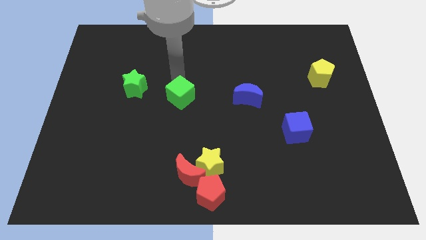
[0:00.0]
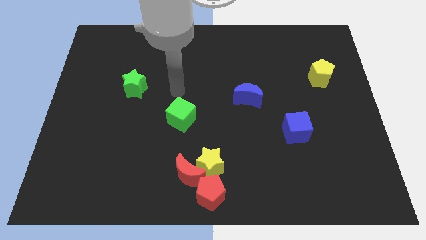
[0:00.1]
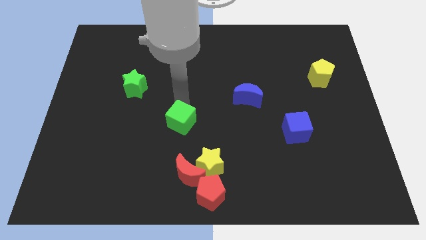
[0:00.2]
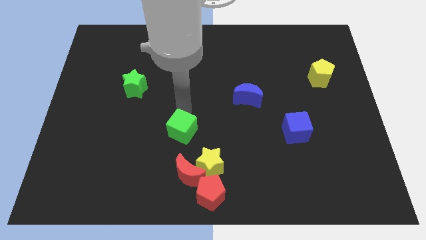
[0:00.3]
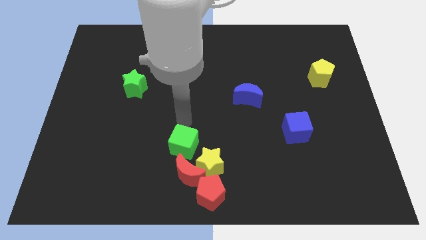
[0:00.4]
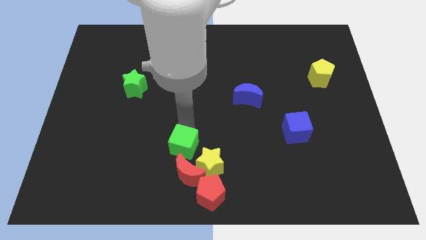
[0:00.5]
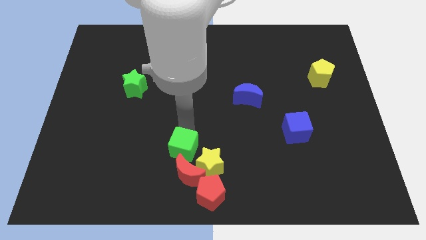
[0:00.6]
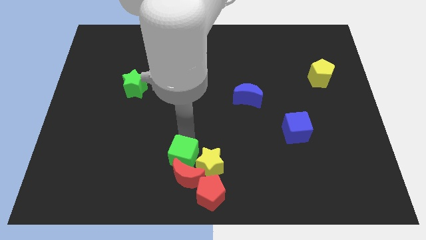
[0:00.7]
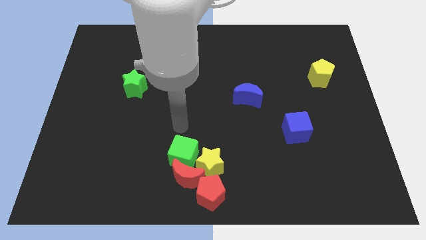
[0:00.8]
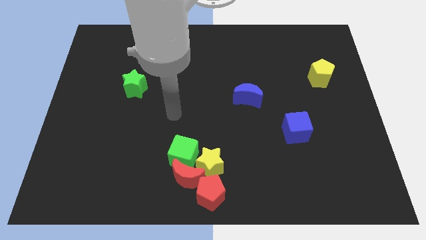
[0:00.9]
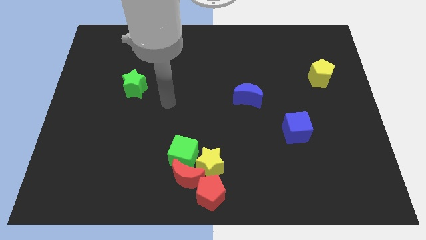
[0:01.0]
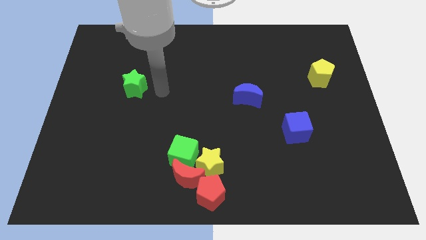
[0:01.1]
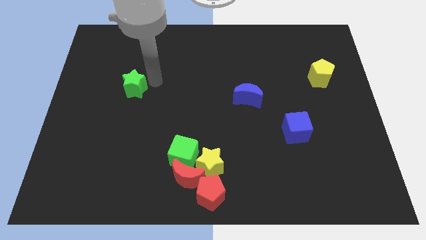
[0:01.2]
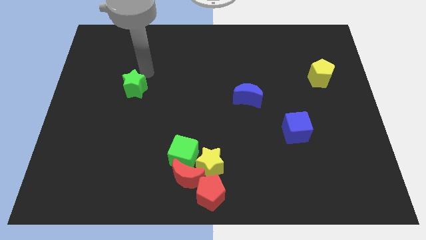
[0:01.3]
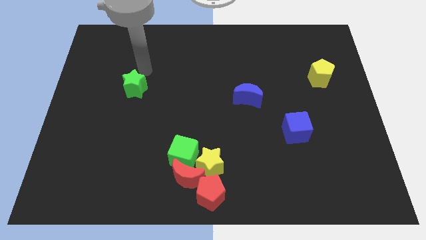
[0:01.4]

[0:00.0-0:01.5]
push the green cube above the red crescent

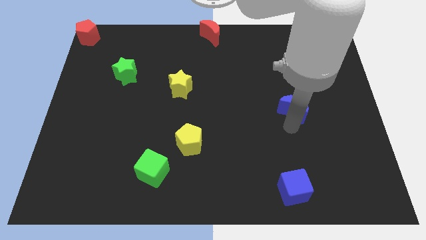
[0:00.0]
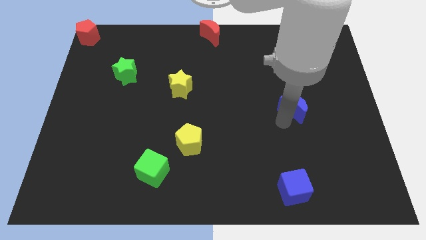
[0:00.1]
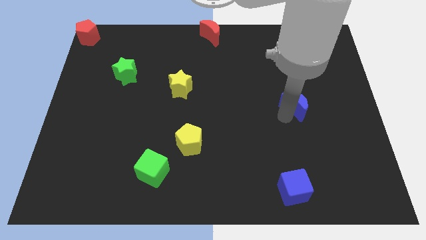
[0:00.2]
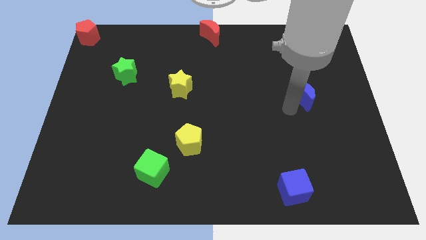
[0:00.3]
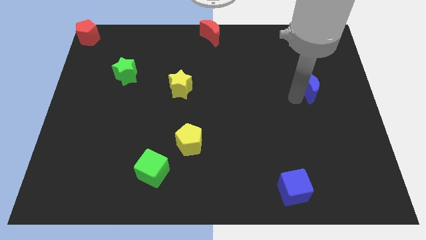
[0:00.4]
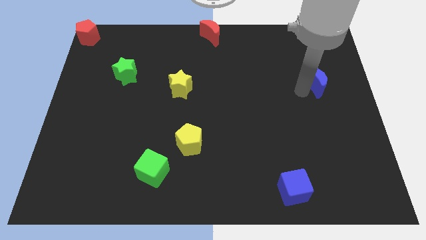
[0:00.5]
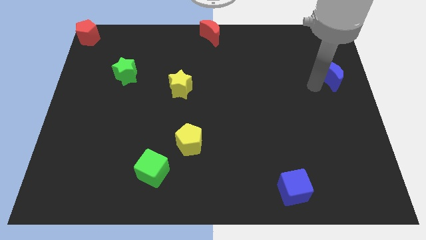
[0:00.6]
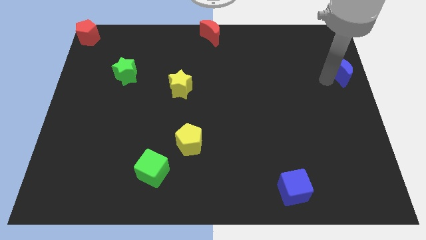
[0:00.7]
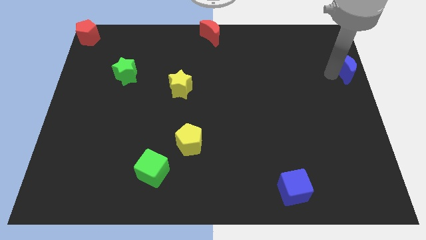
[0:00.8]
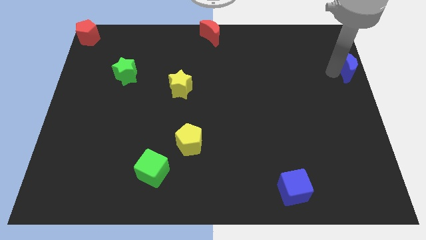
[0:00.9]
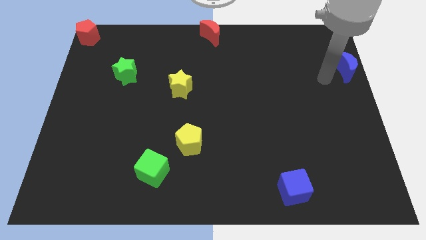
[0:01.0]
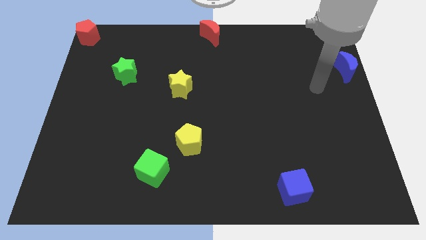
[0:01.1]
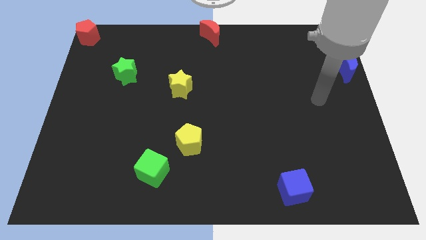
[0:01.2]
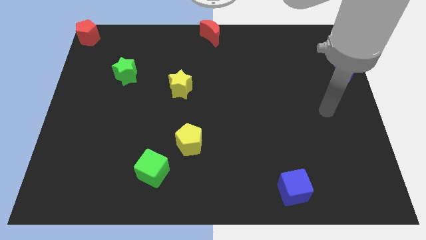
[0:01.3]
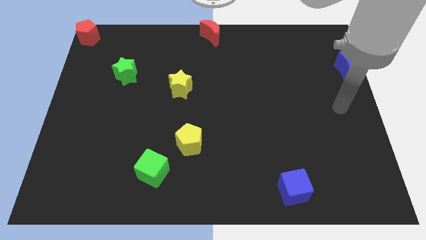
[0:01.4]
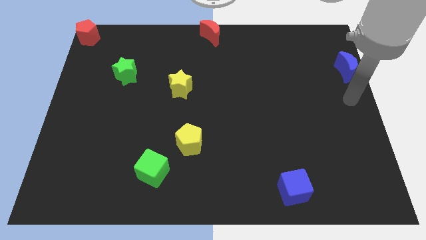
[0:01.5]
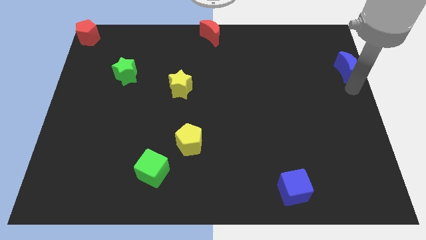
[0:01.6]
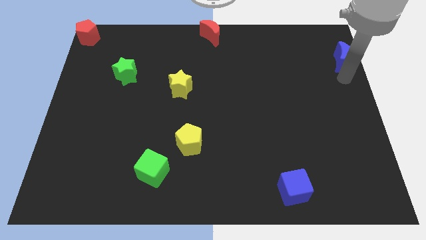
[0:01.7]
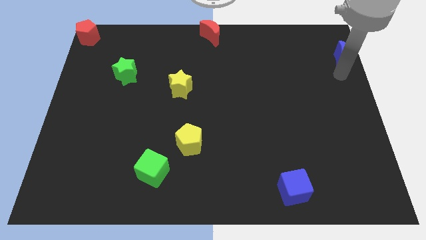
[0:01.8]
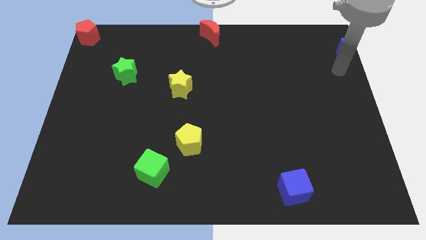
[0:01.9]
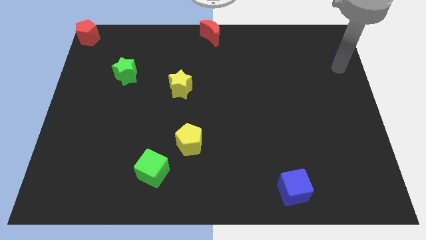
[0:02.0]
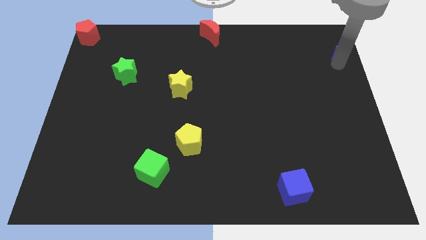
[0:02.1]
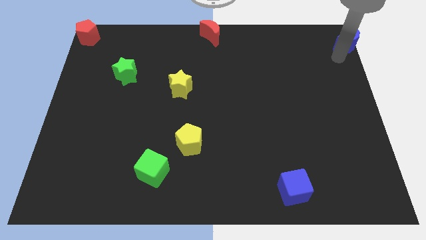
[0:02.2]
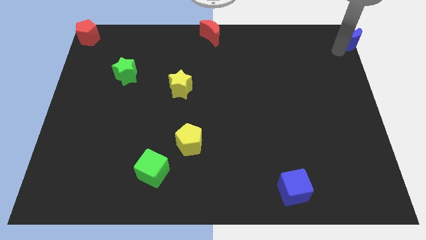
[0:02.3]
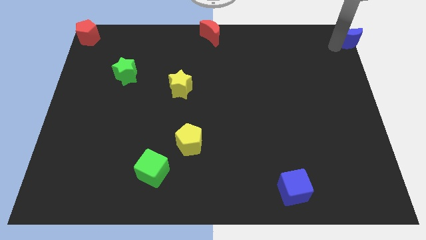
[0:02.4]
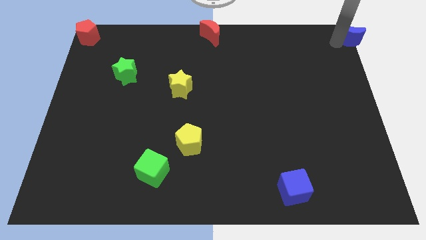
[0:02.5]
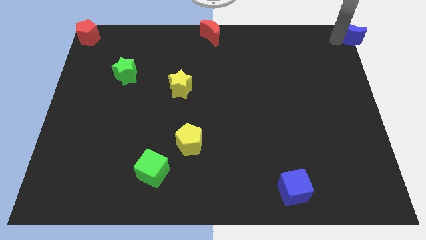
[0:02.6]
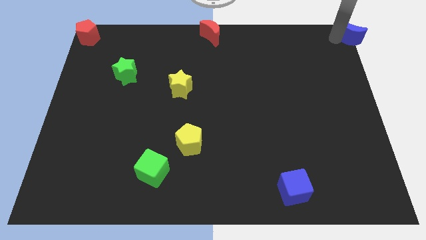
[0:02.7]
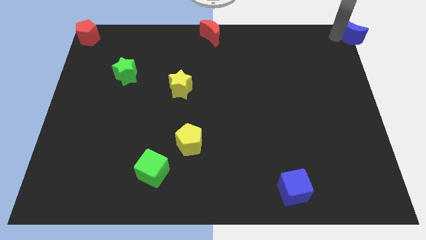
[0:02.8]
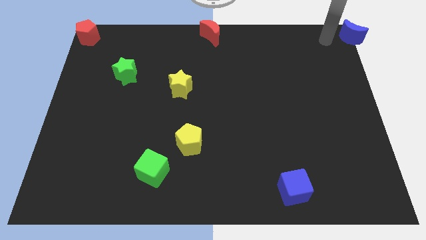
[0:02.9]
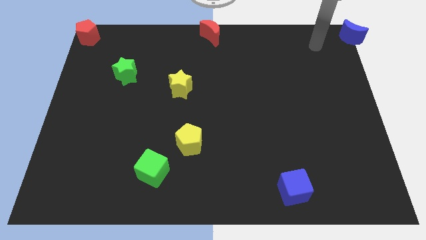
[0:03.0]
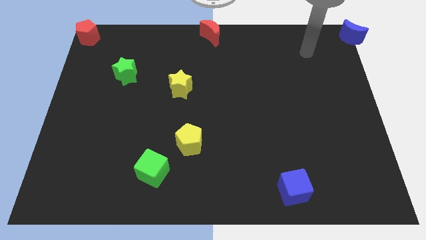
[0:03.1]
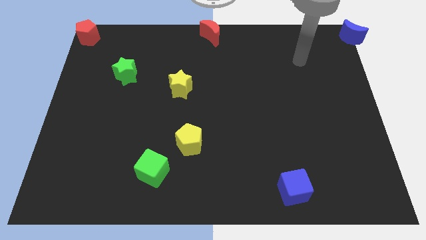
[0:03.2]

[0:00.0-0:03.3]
put blue moon horizontal right to red crescent

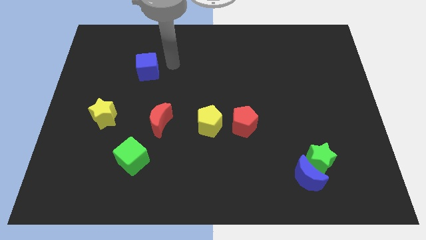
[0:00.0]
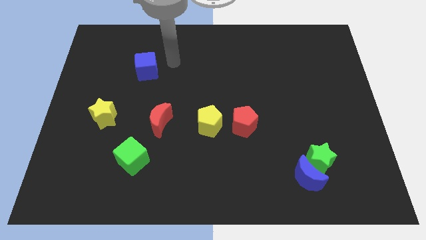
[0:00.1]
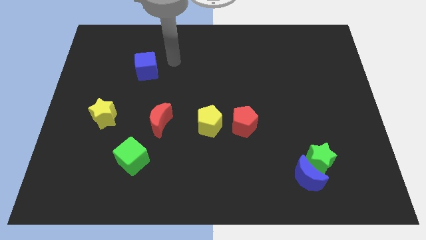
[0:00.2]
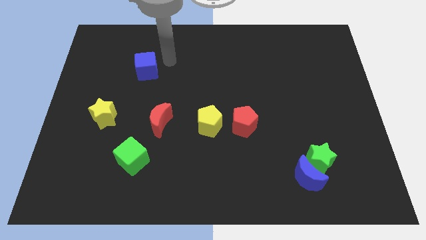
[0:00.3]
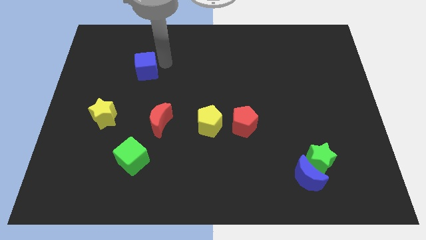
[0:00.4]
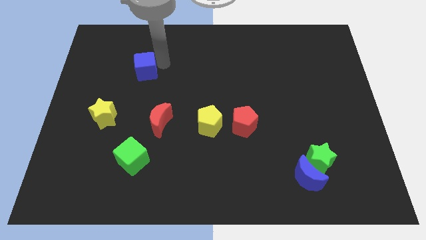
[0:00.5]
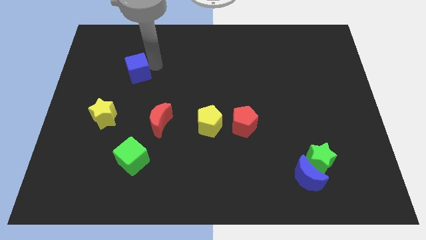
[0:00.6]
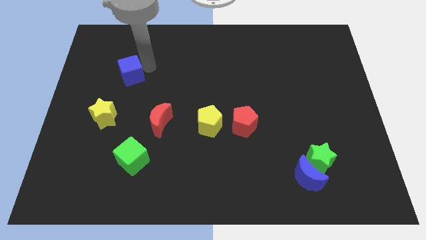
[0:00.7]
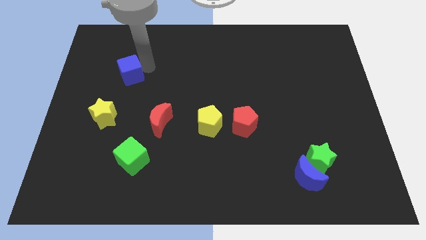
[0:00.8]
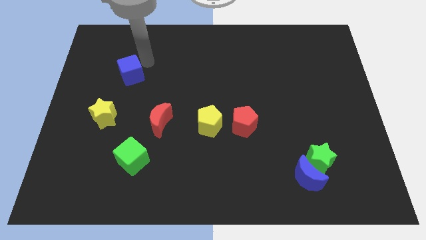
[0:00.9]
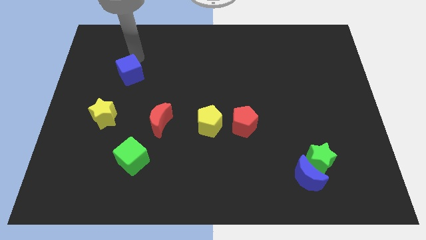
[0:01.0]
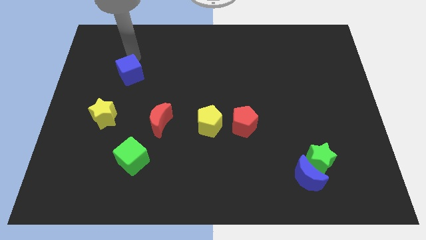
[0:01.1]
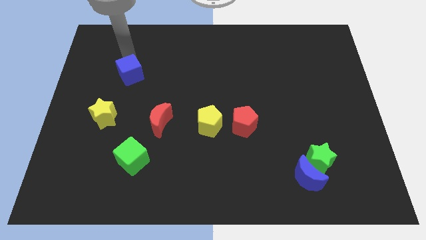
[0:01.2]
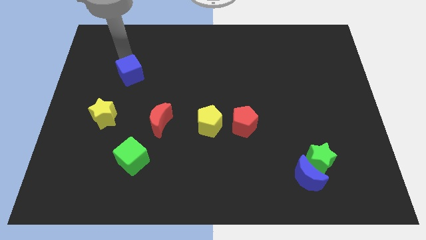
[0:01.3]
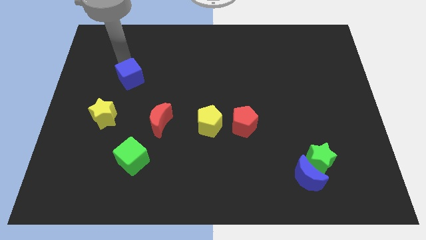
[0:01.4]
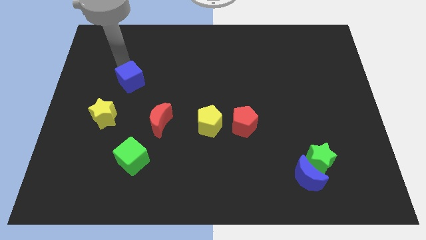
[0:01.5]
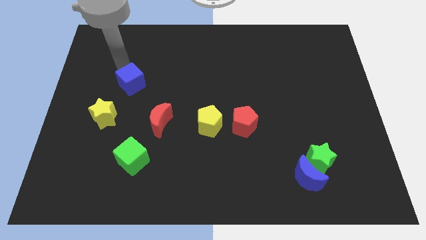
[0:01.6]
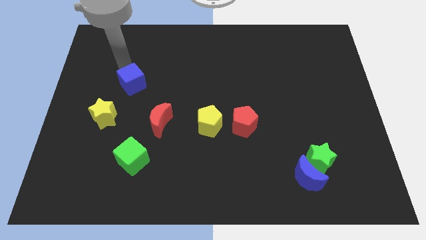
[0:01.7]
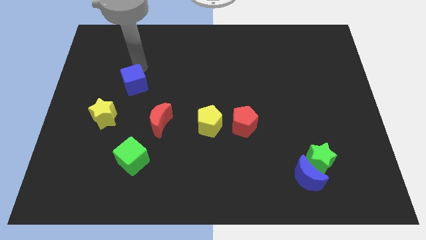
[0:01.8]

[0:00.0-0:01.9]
move the blue cube slightly downwards

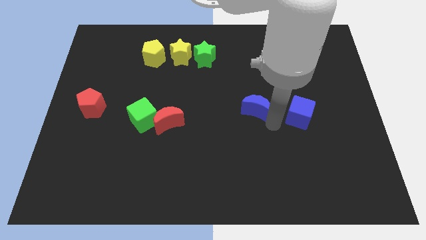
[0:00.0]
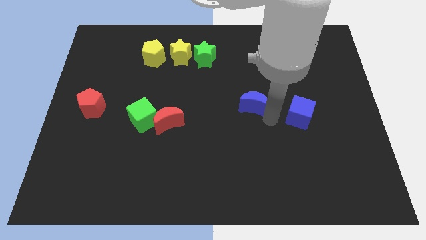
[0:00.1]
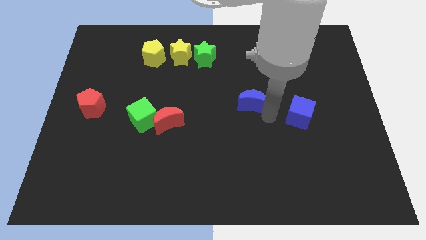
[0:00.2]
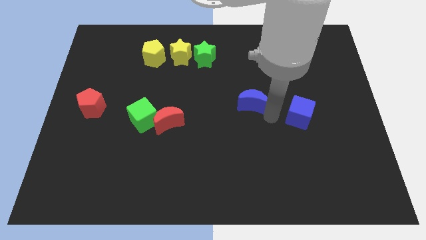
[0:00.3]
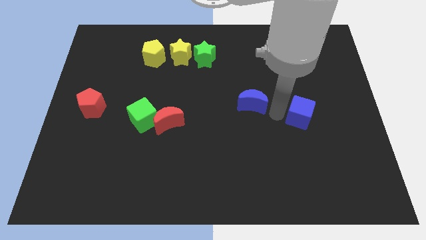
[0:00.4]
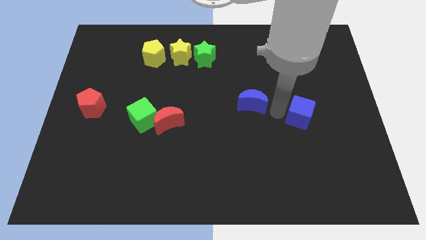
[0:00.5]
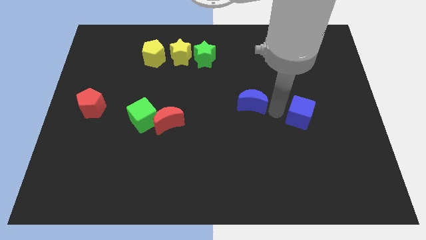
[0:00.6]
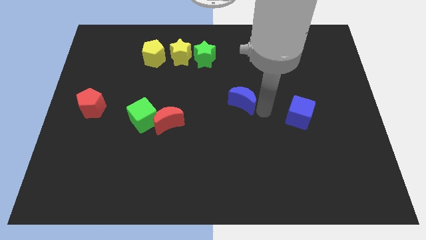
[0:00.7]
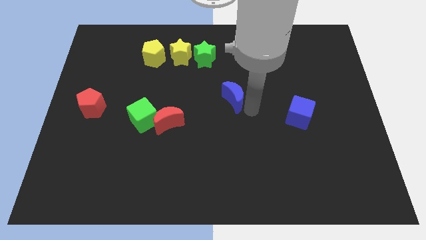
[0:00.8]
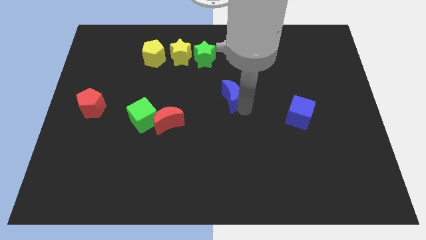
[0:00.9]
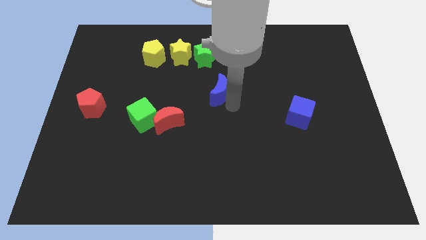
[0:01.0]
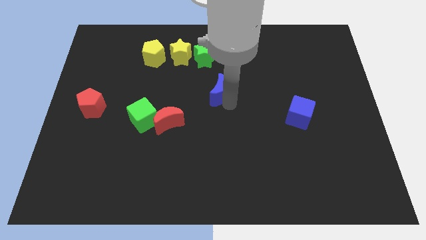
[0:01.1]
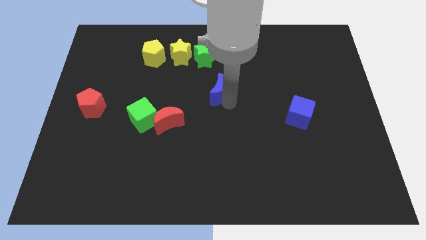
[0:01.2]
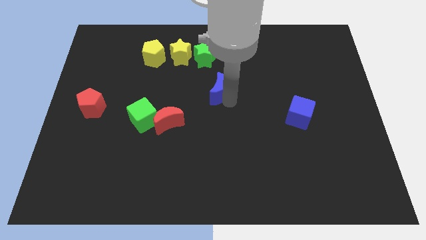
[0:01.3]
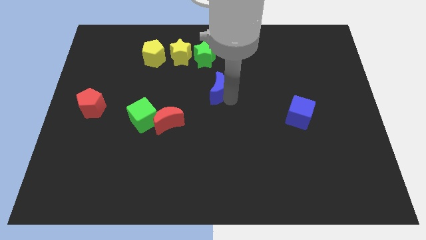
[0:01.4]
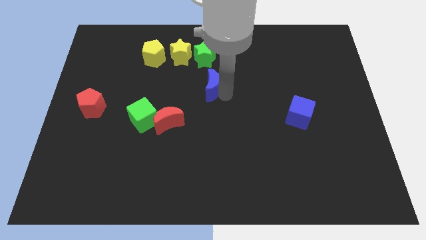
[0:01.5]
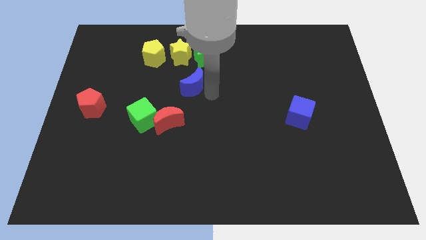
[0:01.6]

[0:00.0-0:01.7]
place the blue crescent below the green star

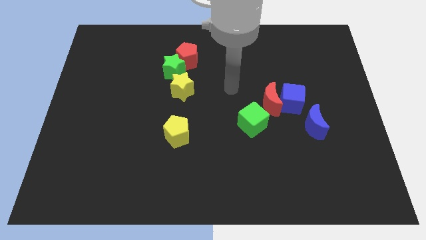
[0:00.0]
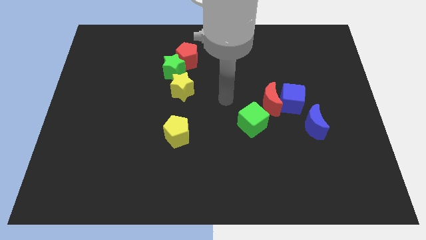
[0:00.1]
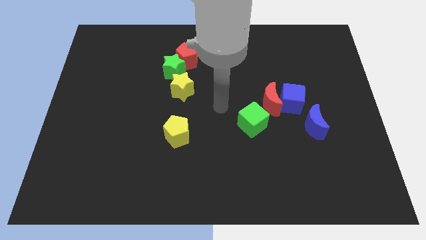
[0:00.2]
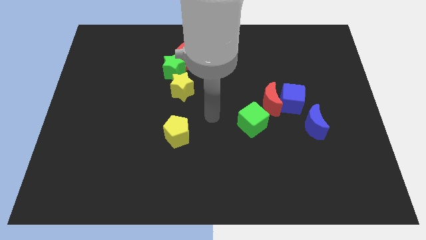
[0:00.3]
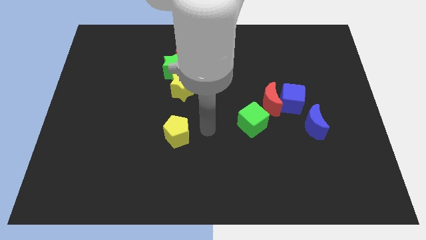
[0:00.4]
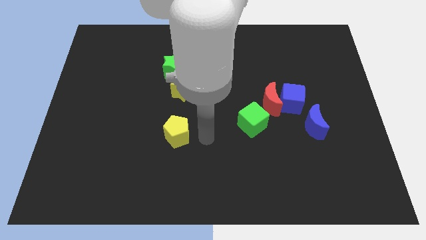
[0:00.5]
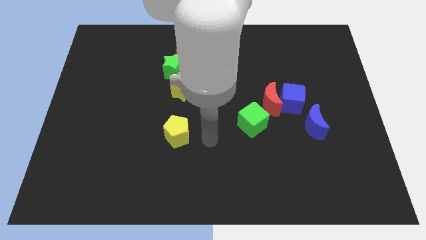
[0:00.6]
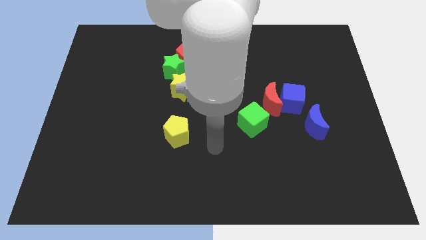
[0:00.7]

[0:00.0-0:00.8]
place the arm to the right side of the yellow pentagon
